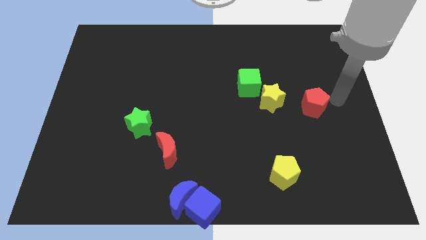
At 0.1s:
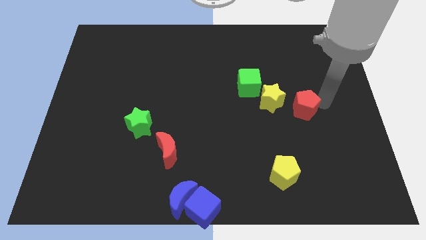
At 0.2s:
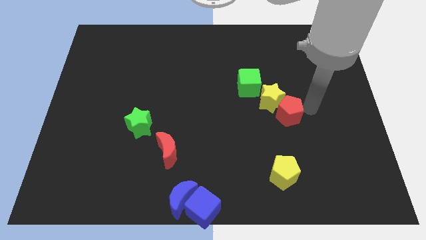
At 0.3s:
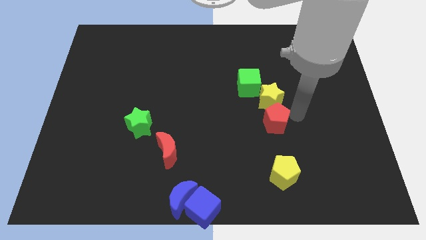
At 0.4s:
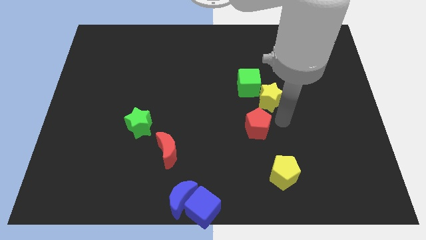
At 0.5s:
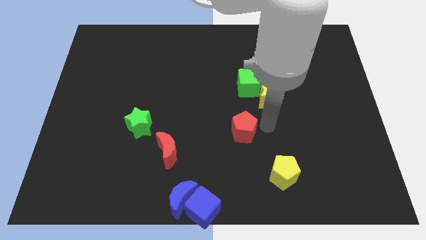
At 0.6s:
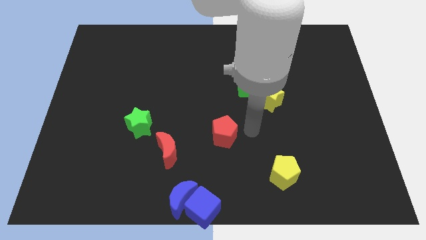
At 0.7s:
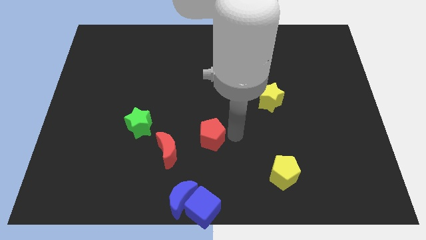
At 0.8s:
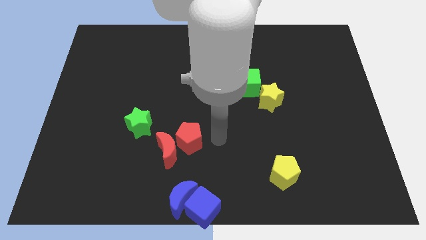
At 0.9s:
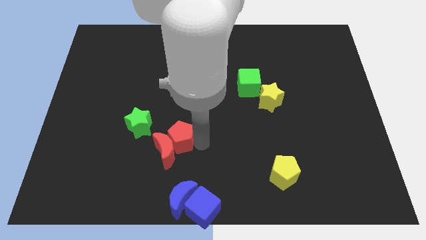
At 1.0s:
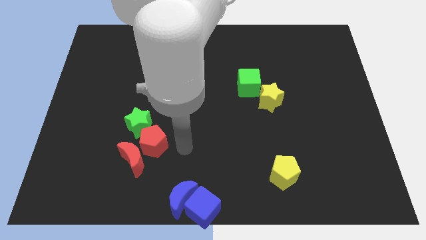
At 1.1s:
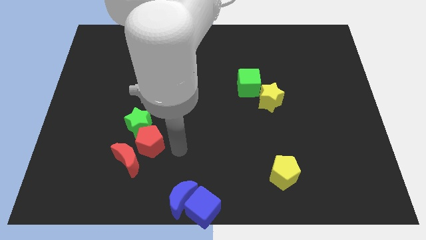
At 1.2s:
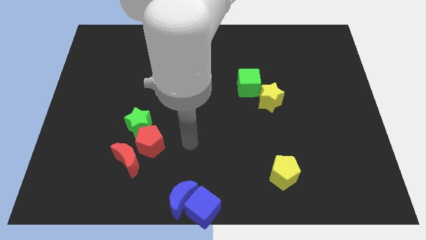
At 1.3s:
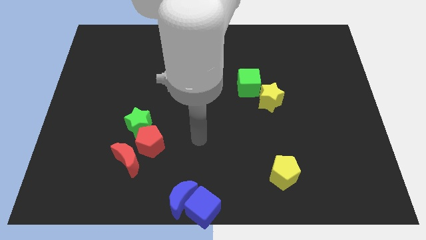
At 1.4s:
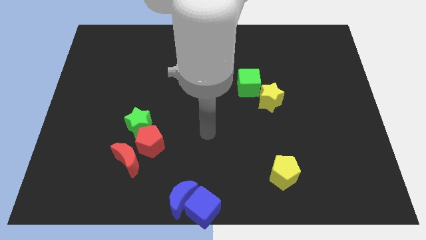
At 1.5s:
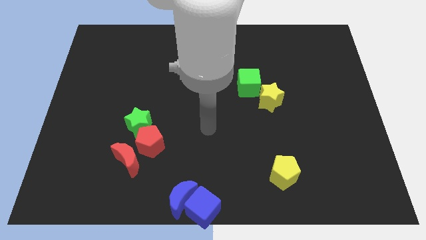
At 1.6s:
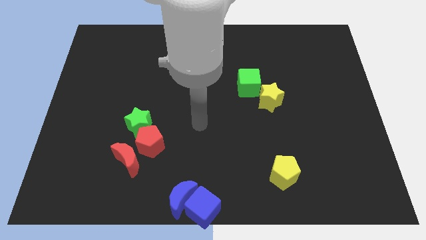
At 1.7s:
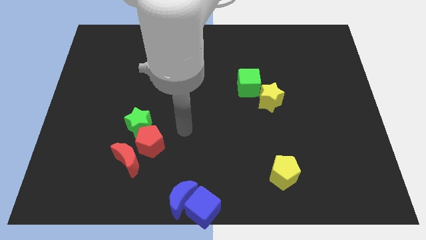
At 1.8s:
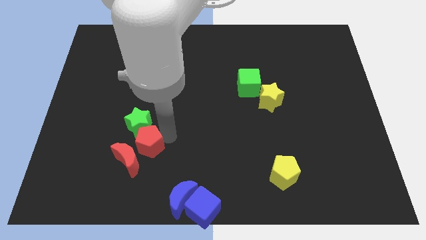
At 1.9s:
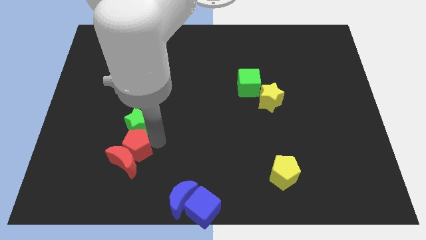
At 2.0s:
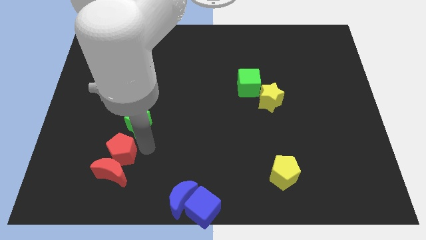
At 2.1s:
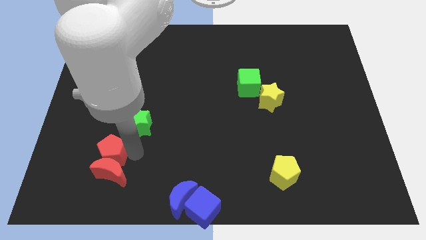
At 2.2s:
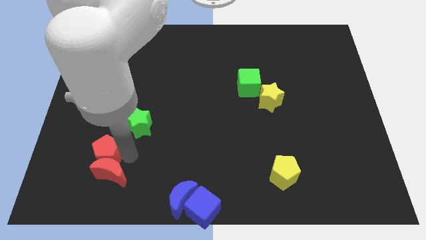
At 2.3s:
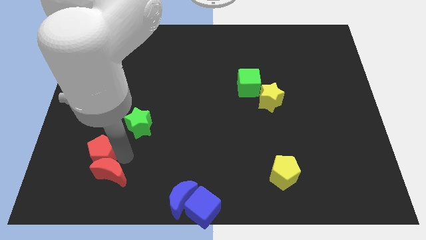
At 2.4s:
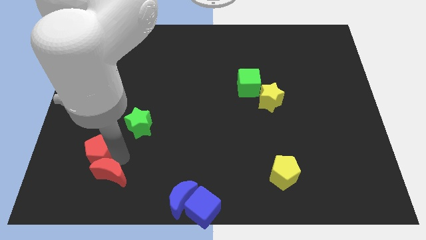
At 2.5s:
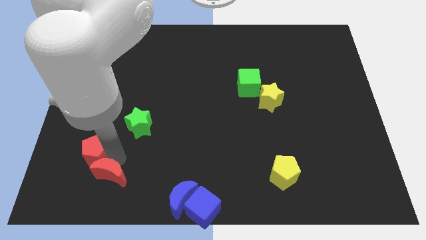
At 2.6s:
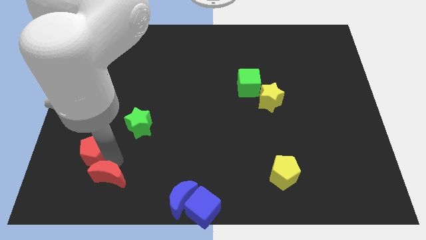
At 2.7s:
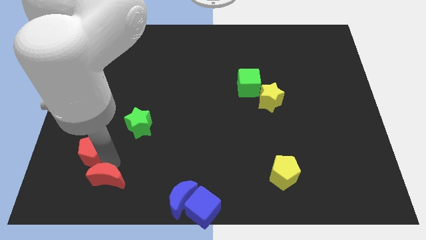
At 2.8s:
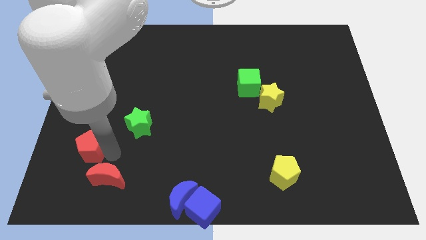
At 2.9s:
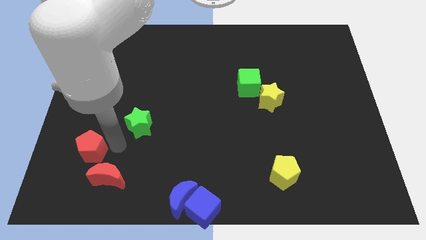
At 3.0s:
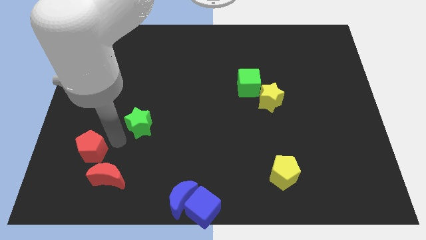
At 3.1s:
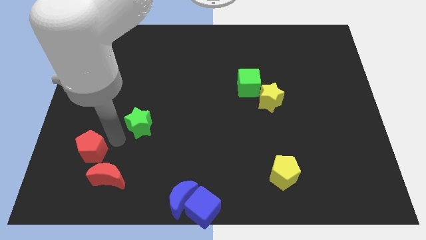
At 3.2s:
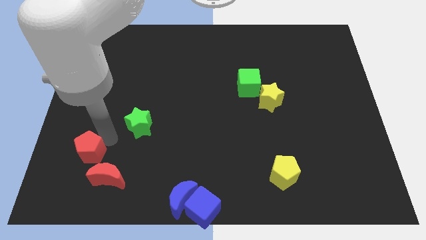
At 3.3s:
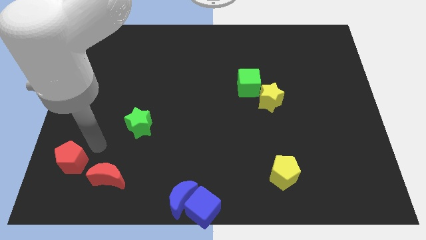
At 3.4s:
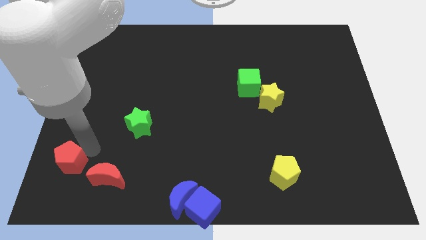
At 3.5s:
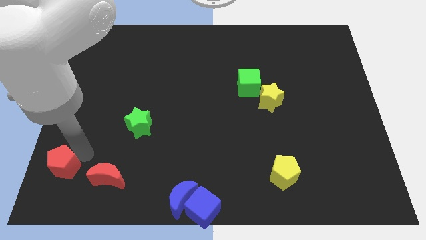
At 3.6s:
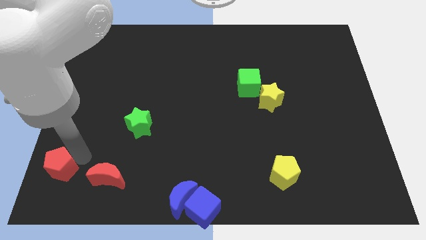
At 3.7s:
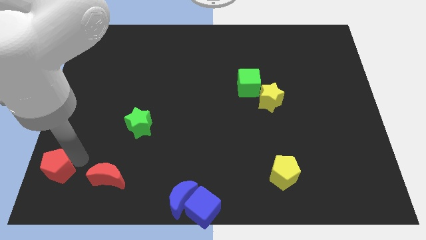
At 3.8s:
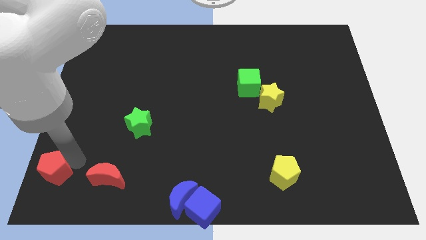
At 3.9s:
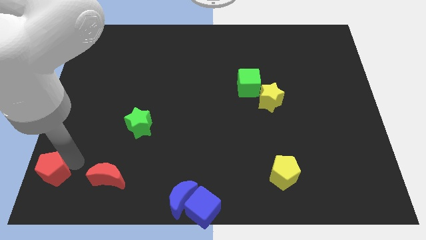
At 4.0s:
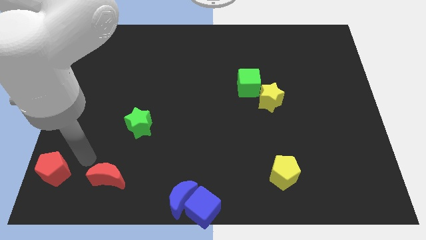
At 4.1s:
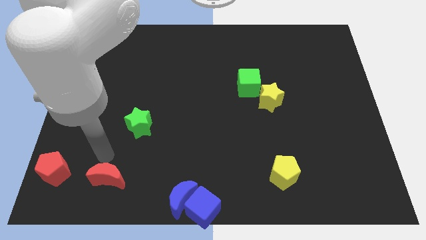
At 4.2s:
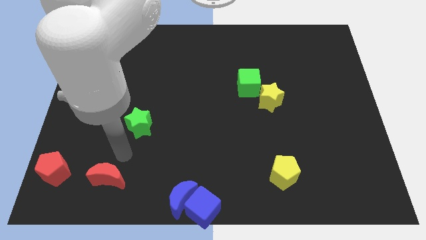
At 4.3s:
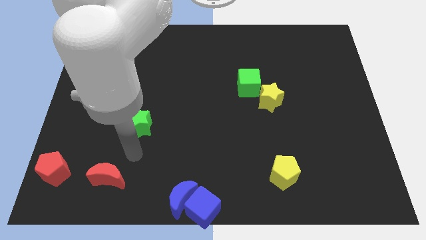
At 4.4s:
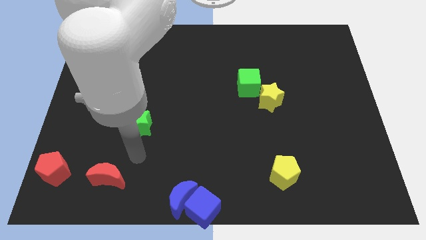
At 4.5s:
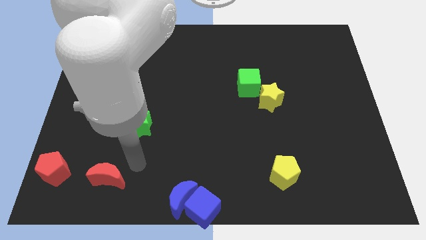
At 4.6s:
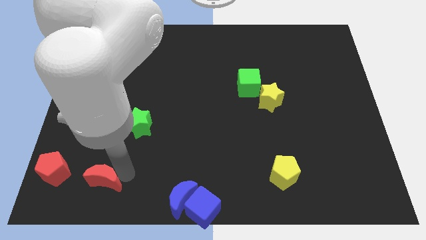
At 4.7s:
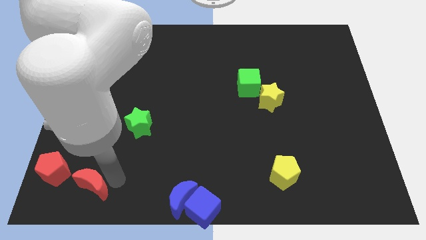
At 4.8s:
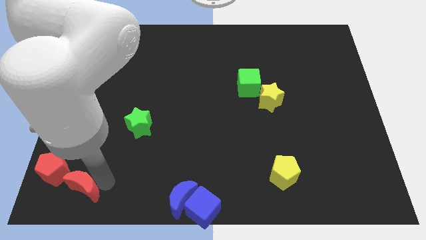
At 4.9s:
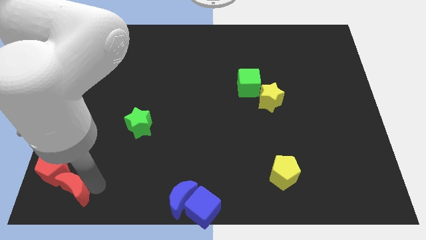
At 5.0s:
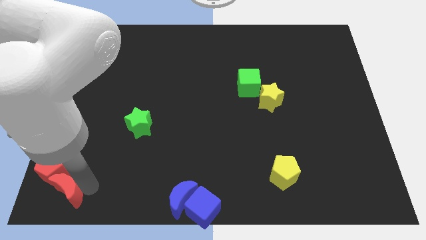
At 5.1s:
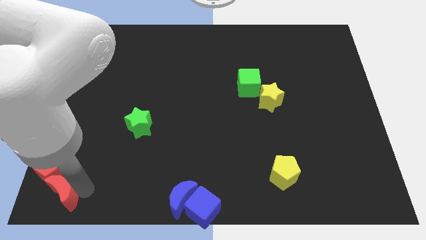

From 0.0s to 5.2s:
push the red pentagon into the red crescent

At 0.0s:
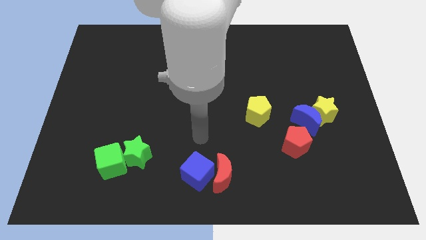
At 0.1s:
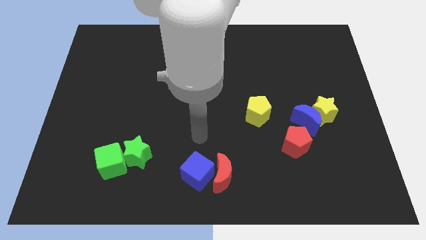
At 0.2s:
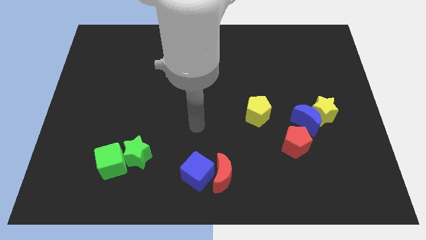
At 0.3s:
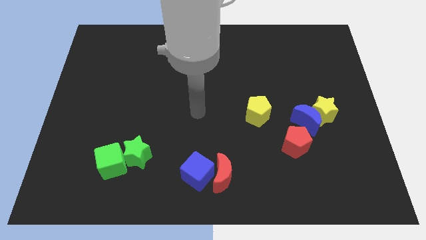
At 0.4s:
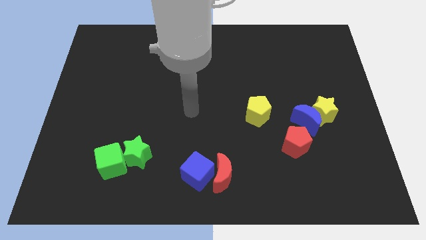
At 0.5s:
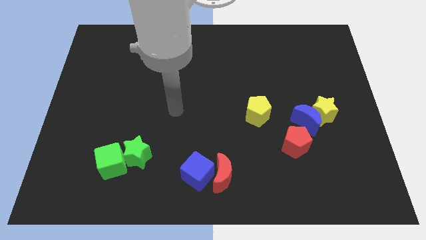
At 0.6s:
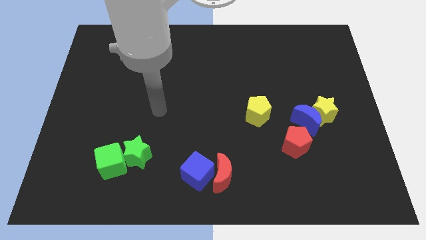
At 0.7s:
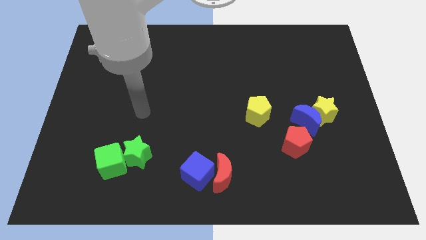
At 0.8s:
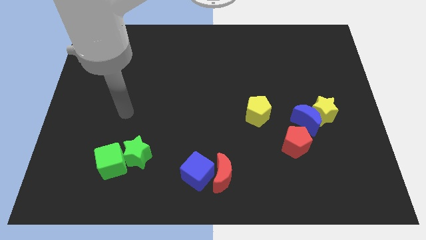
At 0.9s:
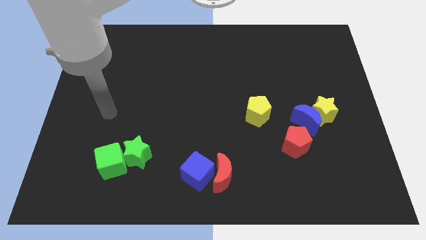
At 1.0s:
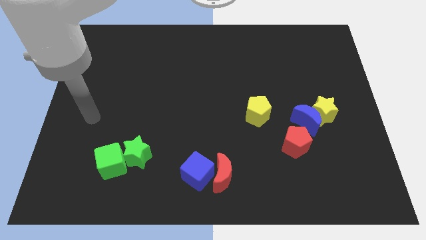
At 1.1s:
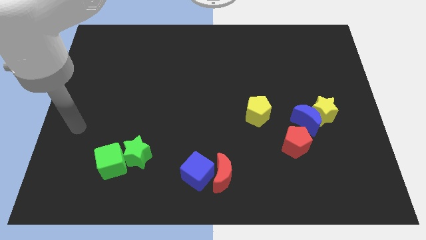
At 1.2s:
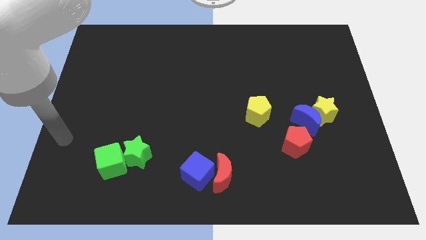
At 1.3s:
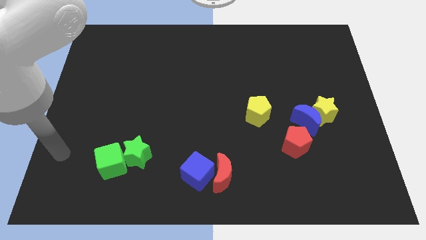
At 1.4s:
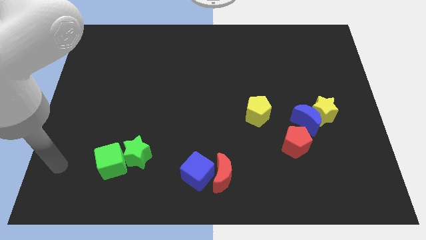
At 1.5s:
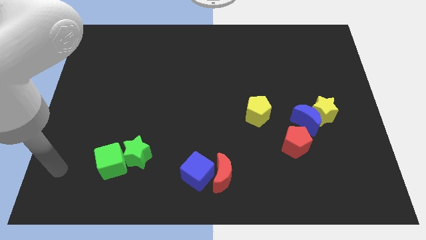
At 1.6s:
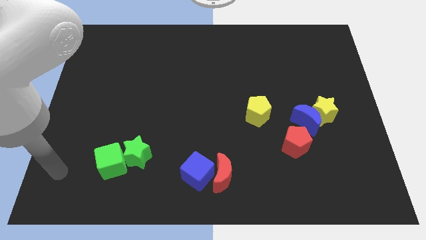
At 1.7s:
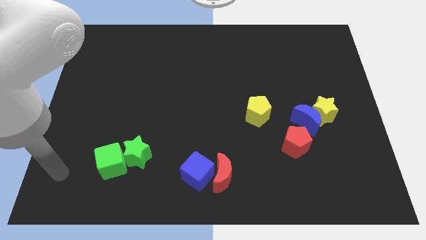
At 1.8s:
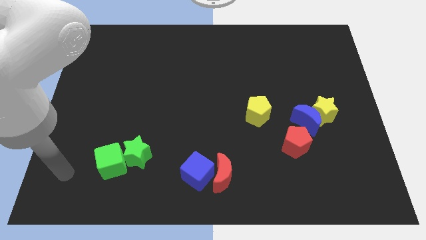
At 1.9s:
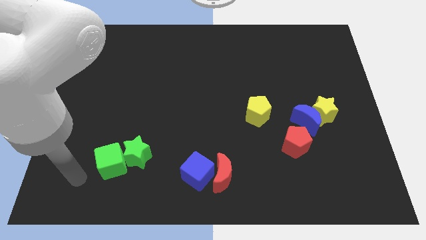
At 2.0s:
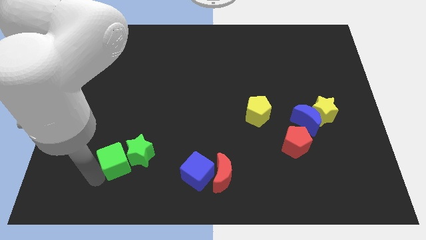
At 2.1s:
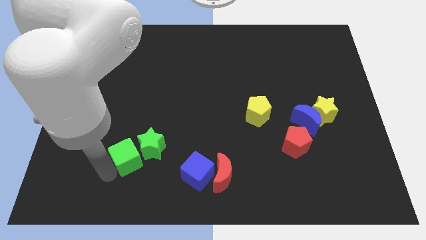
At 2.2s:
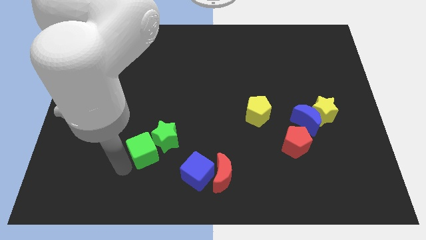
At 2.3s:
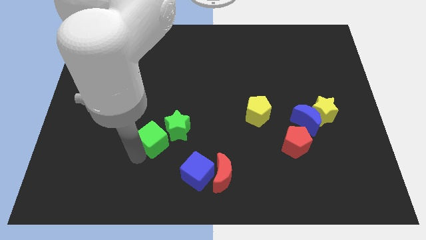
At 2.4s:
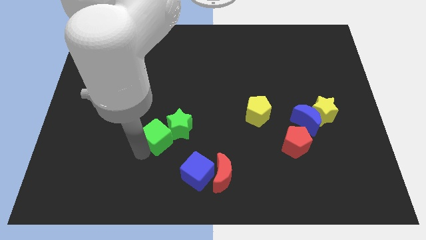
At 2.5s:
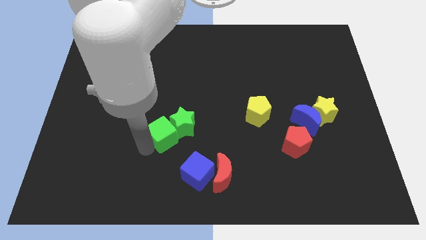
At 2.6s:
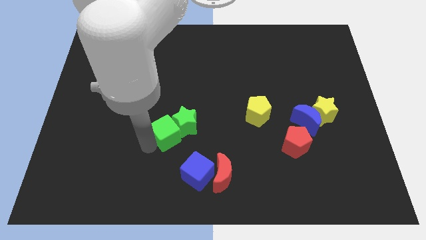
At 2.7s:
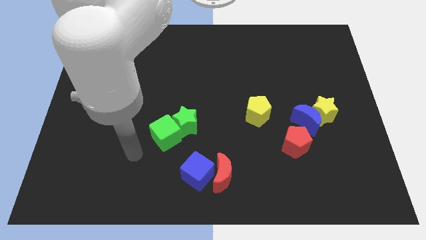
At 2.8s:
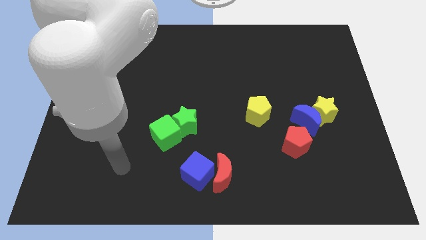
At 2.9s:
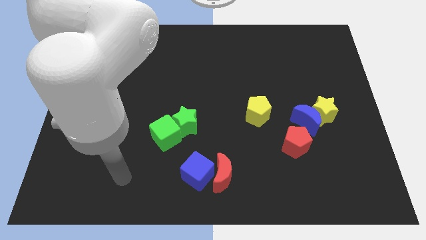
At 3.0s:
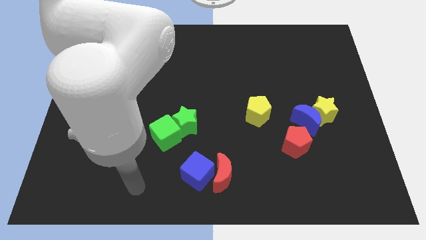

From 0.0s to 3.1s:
push green color blocks towards the center

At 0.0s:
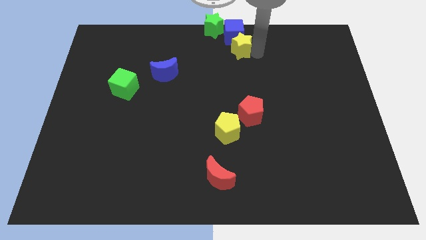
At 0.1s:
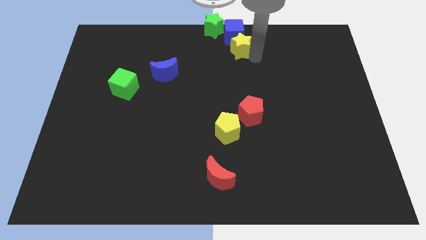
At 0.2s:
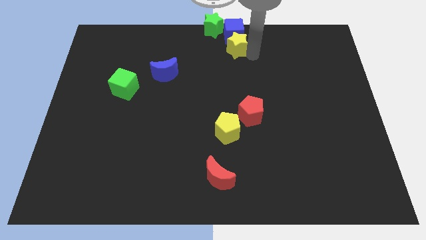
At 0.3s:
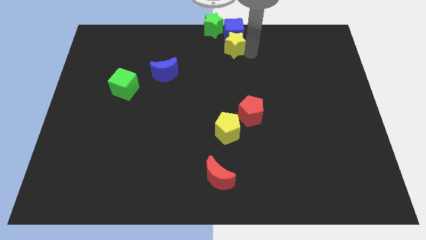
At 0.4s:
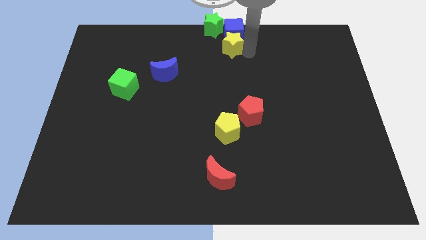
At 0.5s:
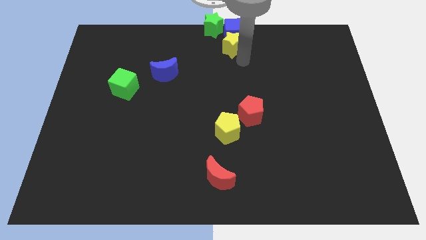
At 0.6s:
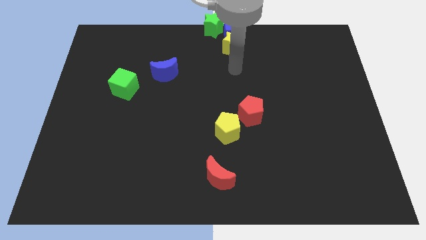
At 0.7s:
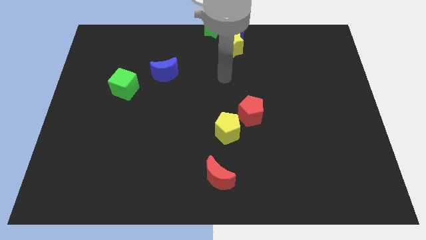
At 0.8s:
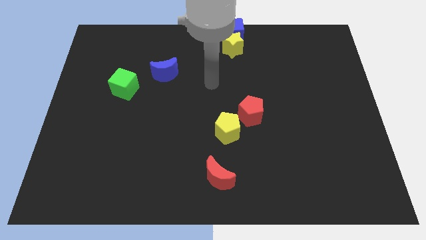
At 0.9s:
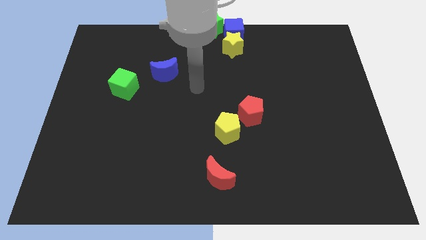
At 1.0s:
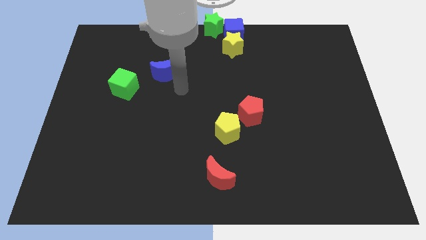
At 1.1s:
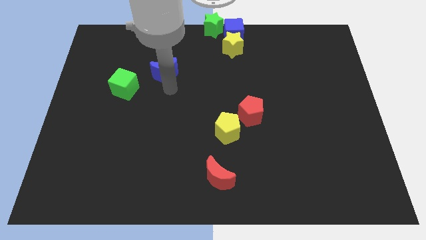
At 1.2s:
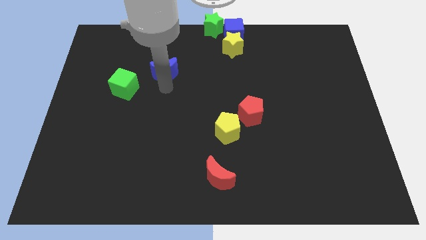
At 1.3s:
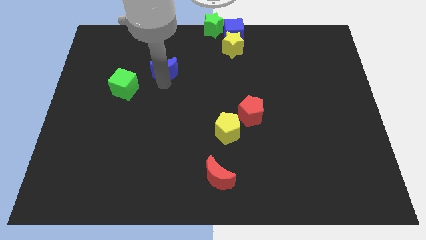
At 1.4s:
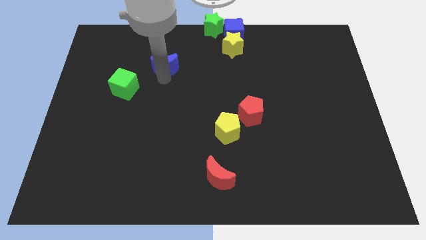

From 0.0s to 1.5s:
move your arm below the blue moon
